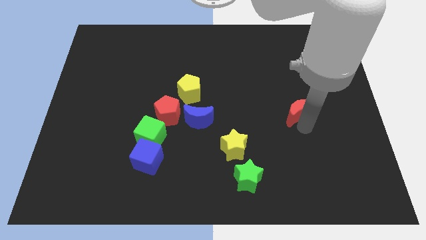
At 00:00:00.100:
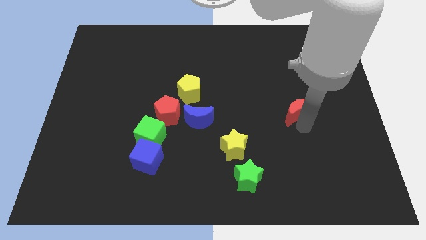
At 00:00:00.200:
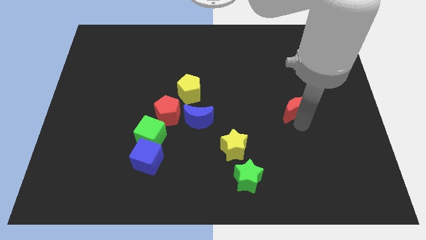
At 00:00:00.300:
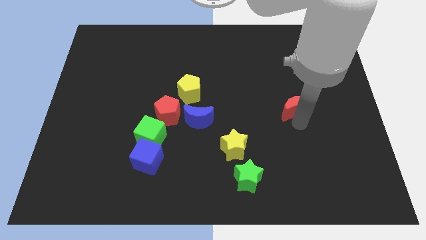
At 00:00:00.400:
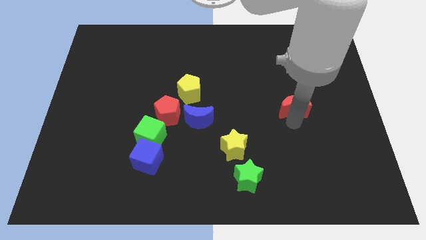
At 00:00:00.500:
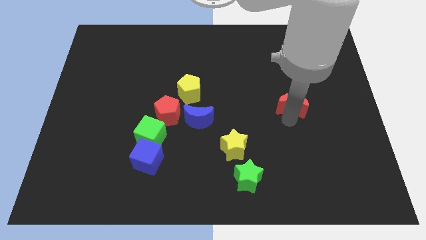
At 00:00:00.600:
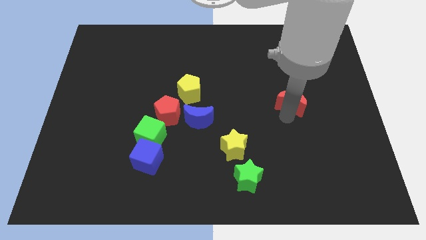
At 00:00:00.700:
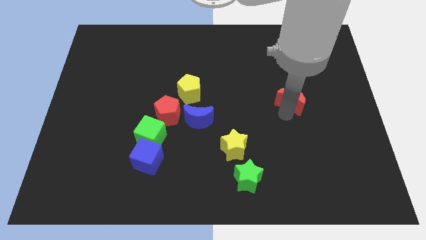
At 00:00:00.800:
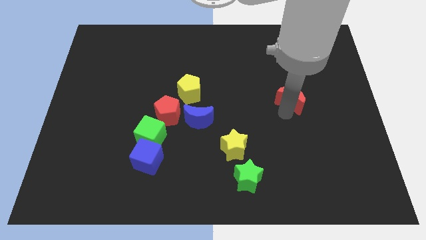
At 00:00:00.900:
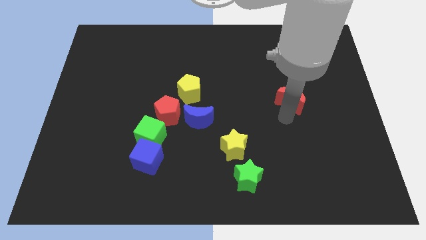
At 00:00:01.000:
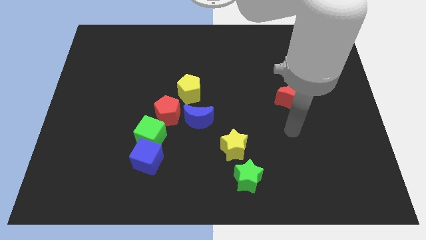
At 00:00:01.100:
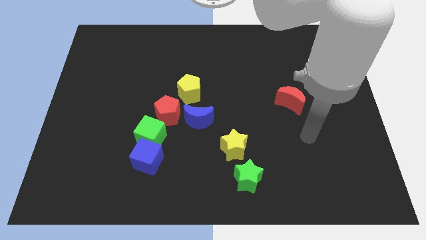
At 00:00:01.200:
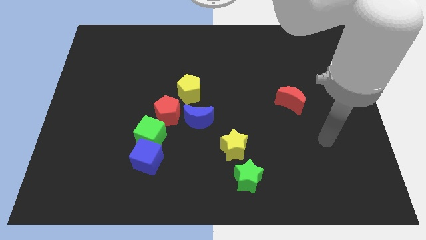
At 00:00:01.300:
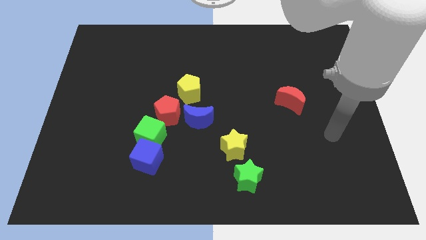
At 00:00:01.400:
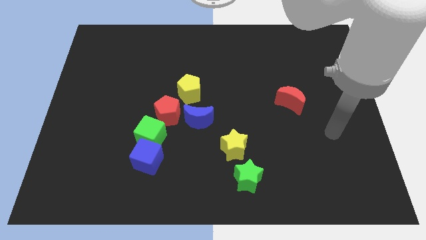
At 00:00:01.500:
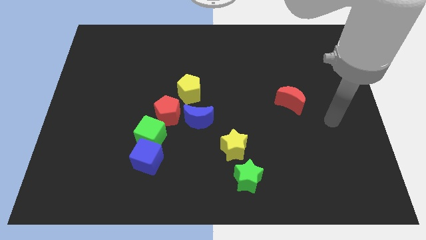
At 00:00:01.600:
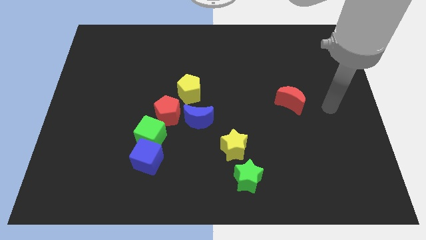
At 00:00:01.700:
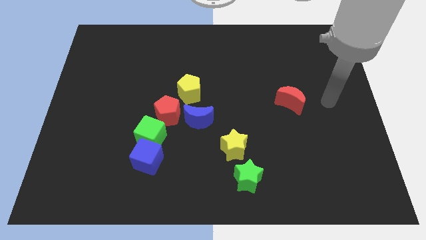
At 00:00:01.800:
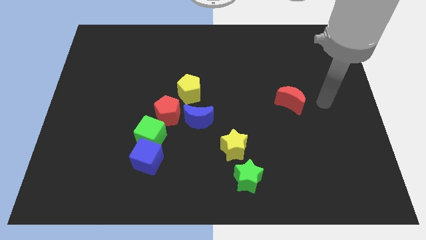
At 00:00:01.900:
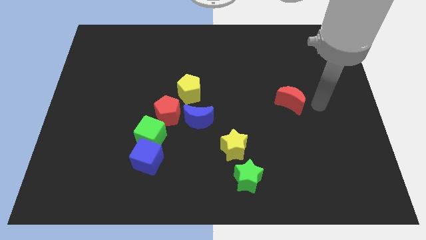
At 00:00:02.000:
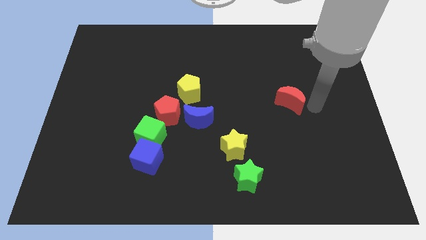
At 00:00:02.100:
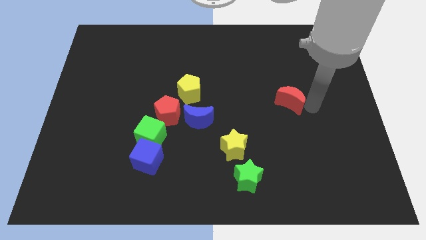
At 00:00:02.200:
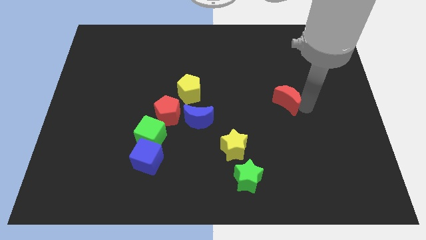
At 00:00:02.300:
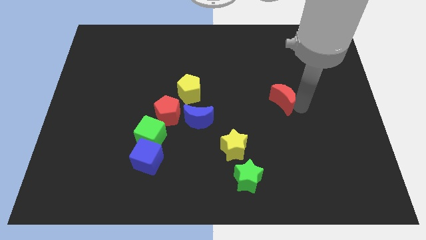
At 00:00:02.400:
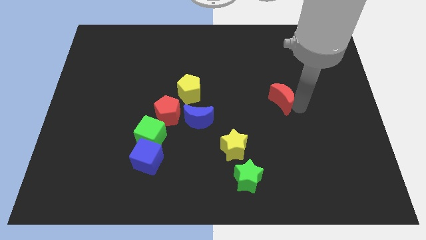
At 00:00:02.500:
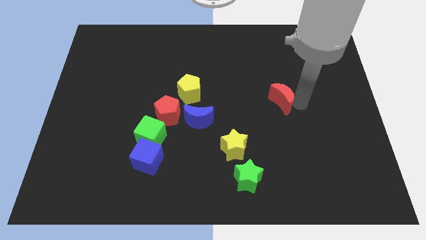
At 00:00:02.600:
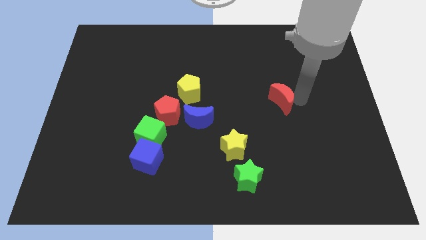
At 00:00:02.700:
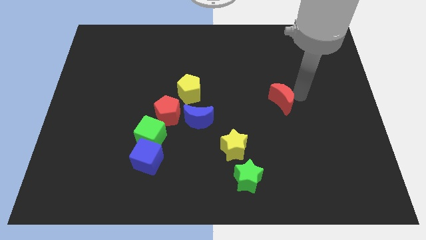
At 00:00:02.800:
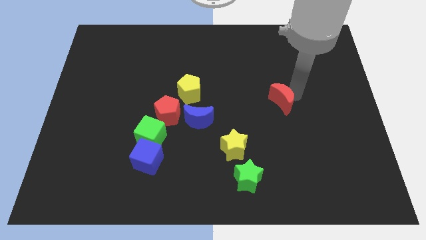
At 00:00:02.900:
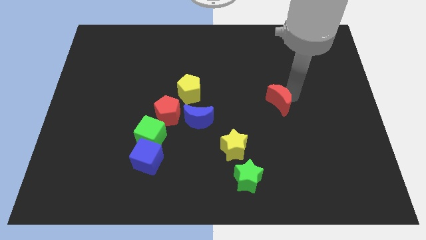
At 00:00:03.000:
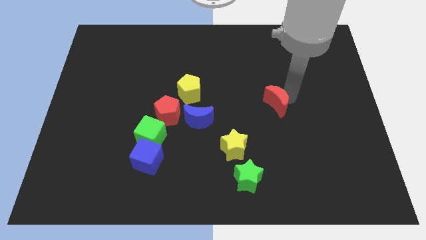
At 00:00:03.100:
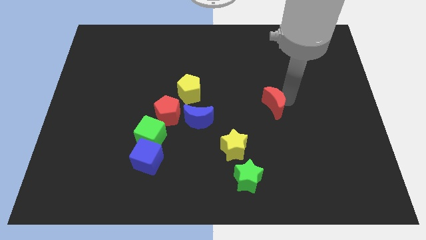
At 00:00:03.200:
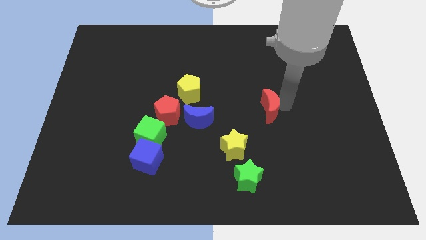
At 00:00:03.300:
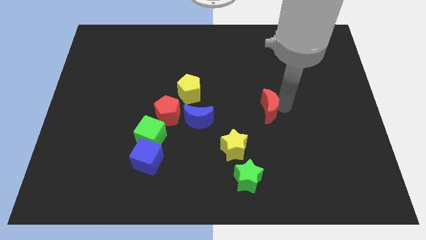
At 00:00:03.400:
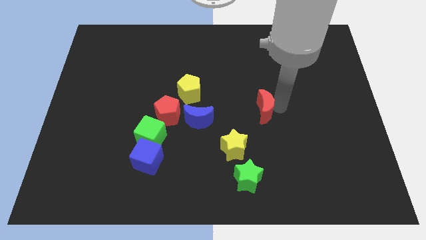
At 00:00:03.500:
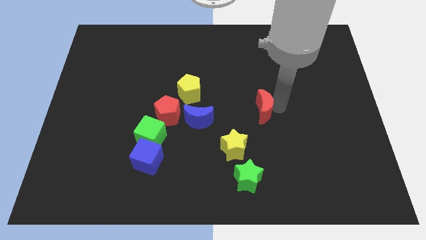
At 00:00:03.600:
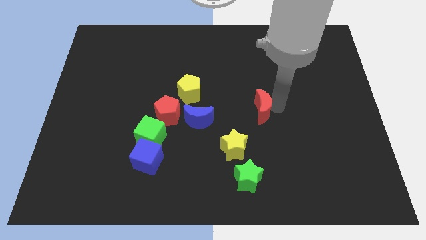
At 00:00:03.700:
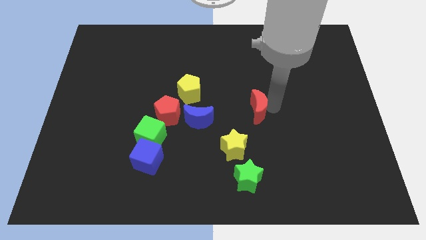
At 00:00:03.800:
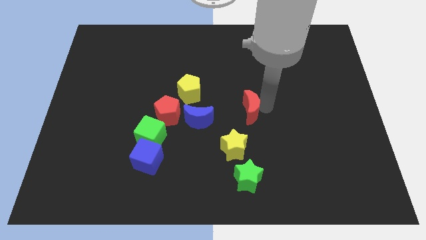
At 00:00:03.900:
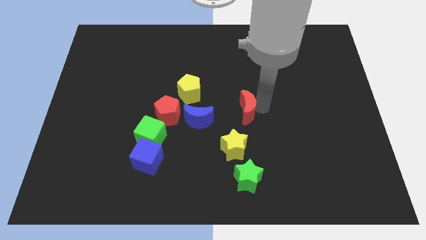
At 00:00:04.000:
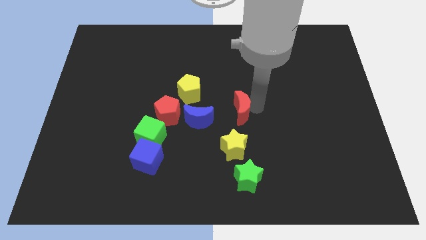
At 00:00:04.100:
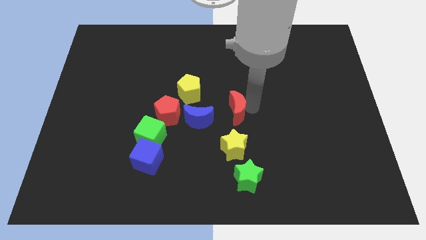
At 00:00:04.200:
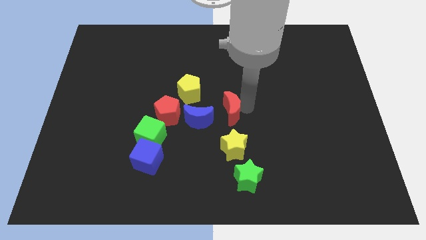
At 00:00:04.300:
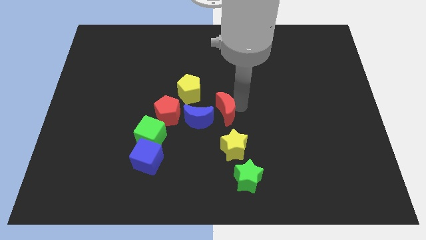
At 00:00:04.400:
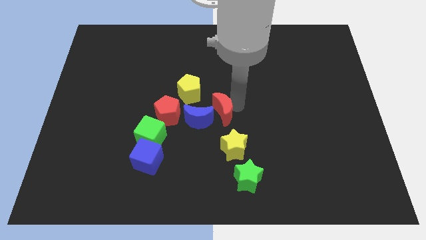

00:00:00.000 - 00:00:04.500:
put the red crescent at the top of yellow star

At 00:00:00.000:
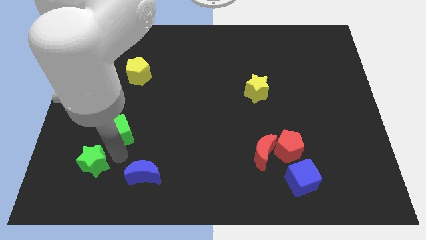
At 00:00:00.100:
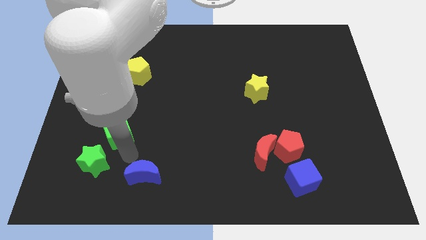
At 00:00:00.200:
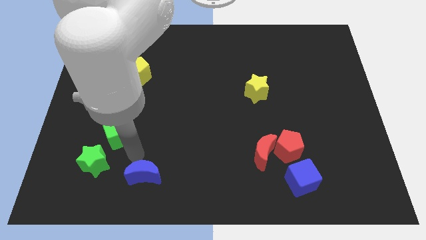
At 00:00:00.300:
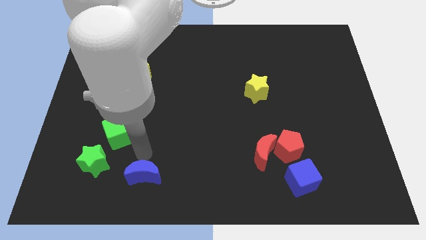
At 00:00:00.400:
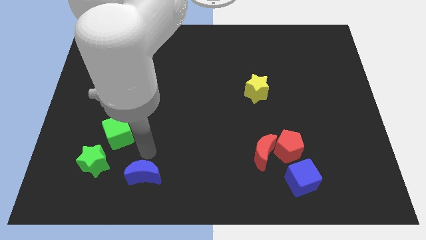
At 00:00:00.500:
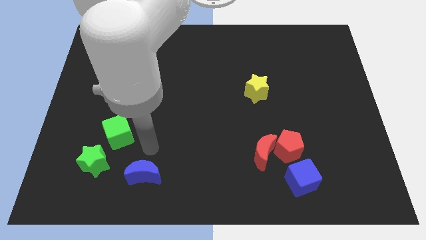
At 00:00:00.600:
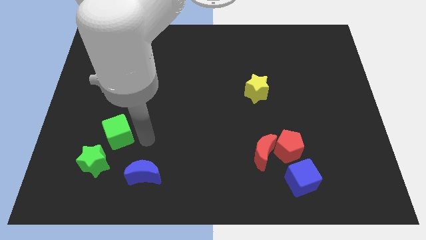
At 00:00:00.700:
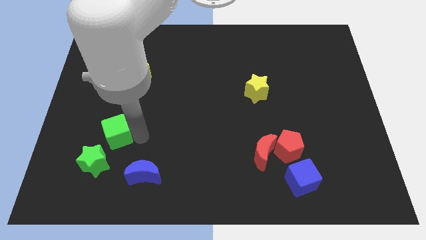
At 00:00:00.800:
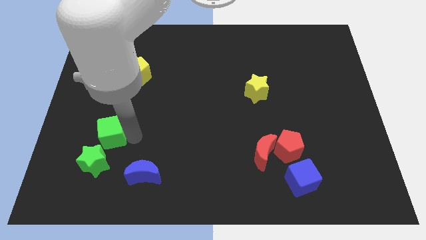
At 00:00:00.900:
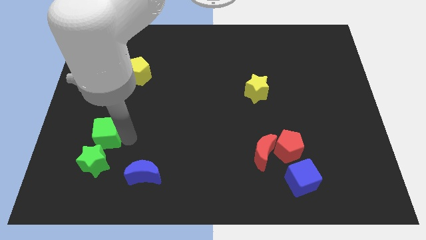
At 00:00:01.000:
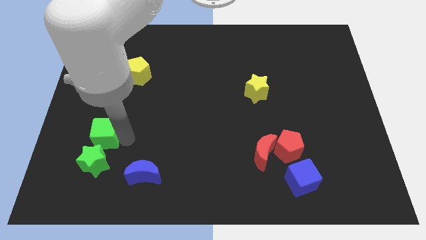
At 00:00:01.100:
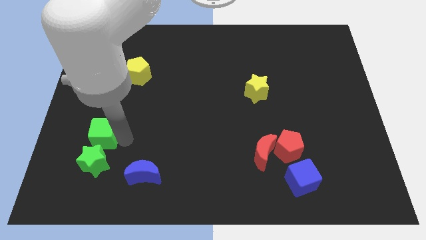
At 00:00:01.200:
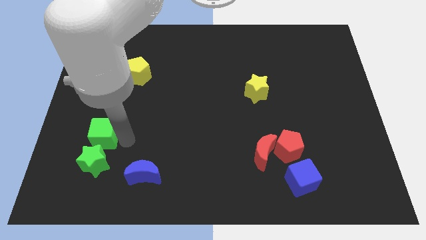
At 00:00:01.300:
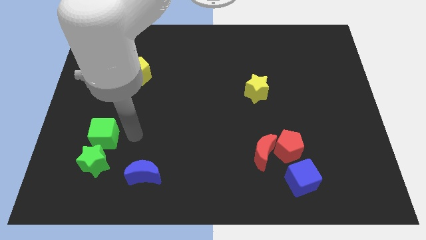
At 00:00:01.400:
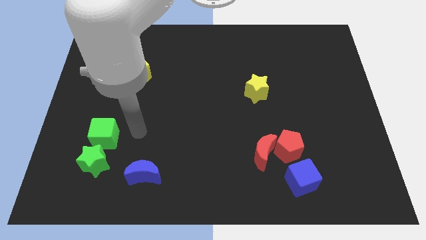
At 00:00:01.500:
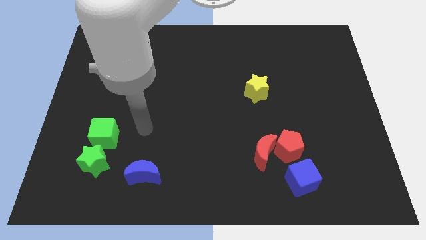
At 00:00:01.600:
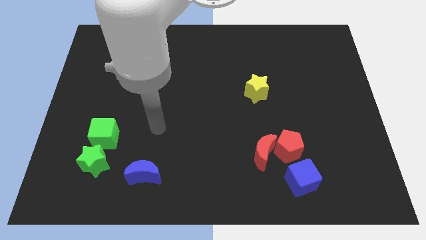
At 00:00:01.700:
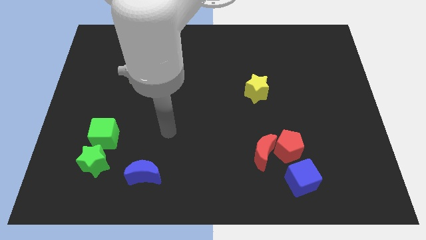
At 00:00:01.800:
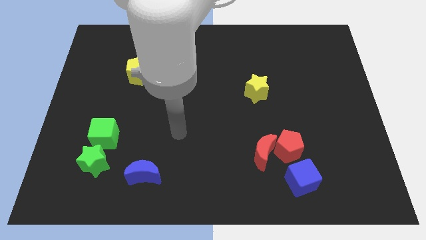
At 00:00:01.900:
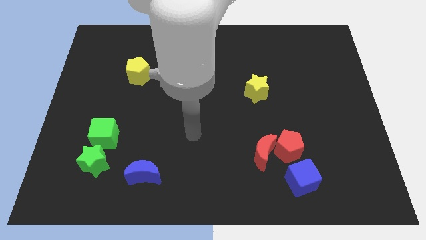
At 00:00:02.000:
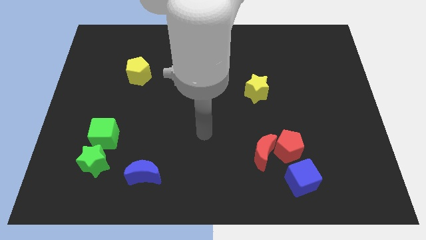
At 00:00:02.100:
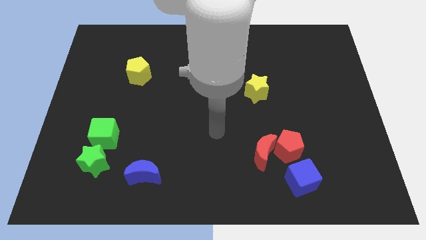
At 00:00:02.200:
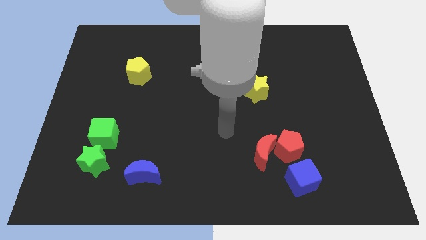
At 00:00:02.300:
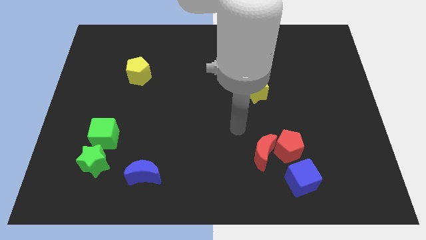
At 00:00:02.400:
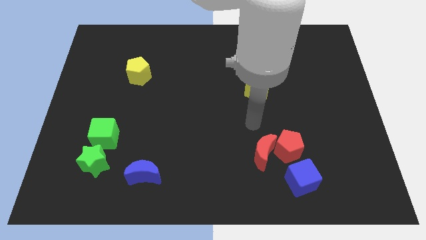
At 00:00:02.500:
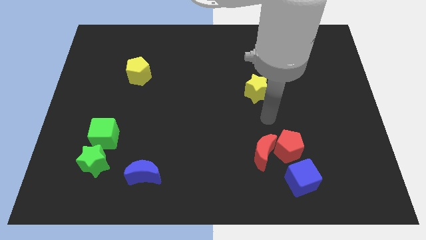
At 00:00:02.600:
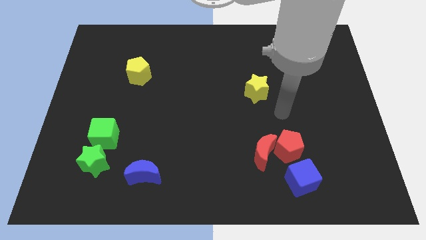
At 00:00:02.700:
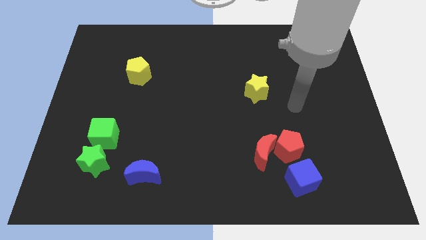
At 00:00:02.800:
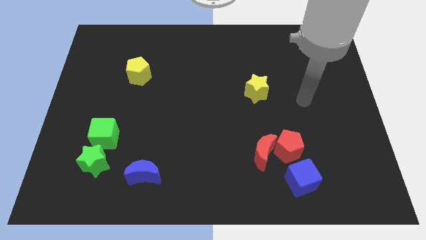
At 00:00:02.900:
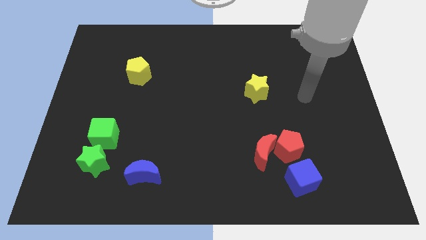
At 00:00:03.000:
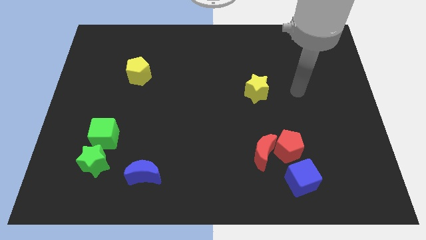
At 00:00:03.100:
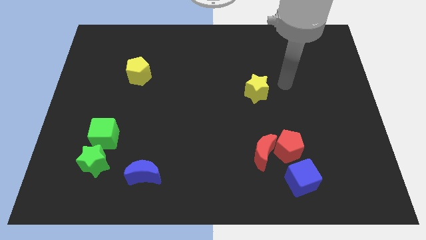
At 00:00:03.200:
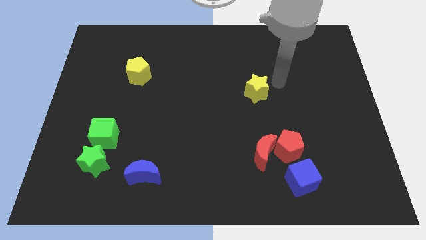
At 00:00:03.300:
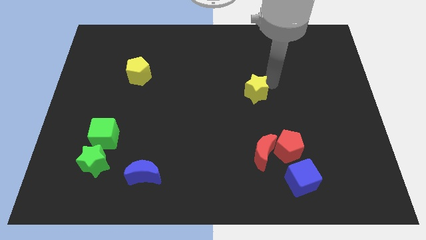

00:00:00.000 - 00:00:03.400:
push the green cube to the top side of the green star

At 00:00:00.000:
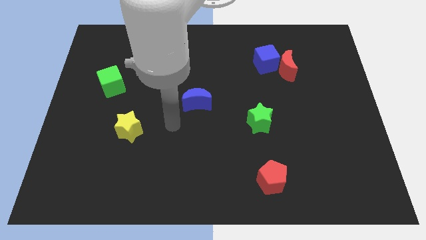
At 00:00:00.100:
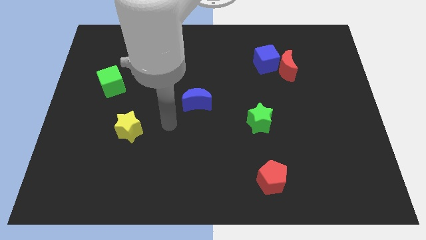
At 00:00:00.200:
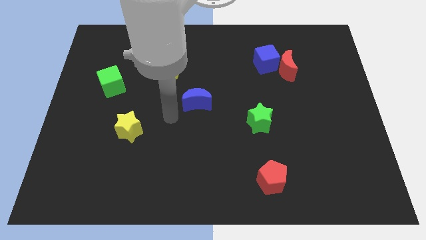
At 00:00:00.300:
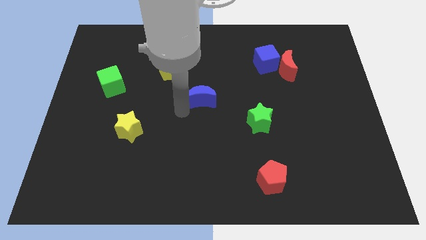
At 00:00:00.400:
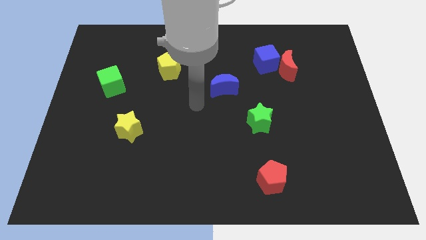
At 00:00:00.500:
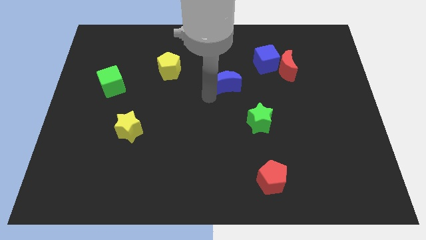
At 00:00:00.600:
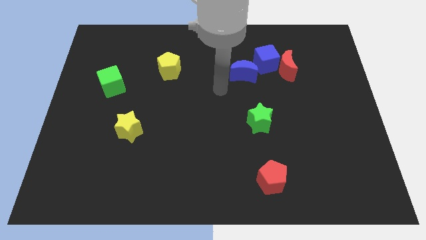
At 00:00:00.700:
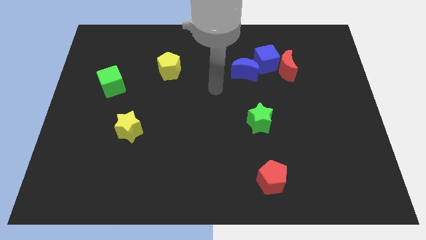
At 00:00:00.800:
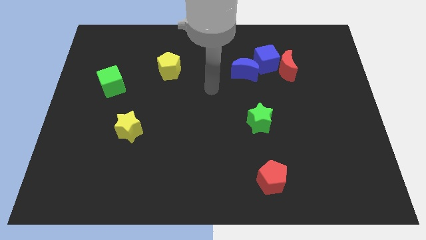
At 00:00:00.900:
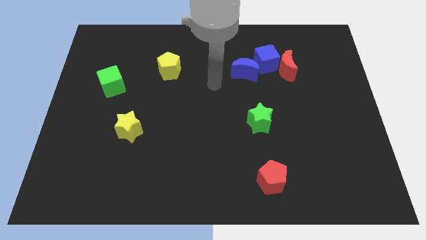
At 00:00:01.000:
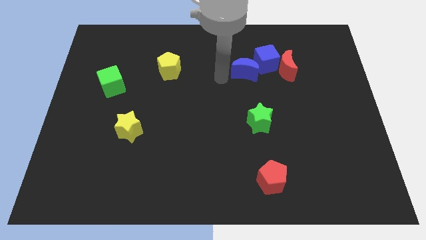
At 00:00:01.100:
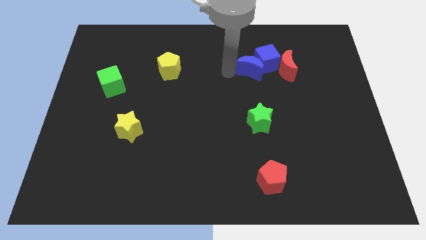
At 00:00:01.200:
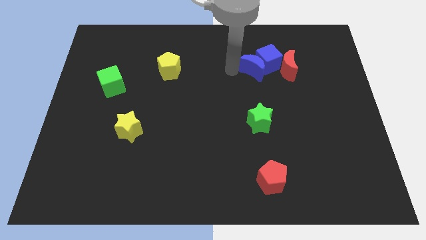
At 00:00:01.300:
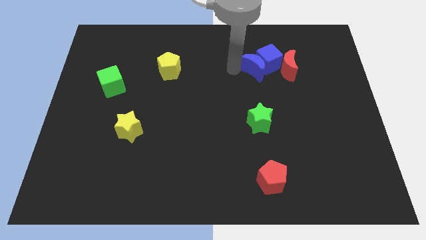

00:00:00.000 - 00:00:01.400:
push blue moon into the blue cube
